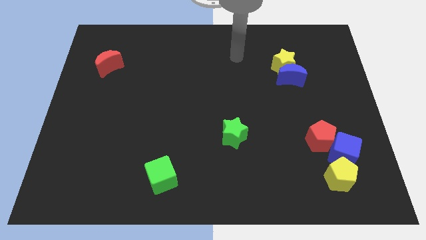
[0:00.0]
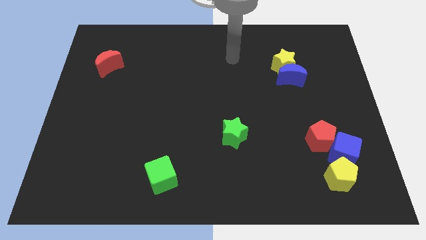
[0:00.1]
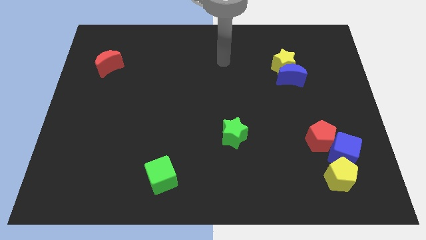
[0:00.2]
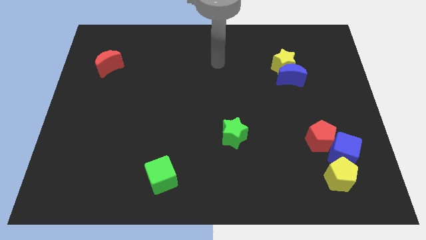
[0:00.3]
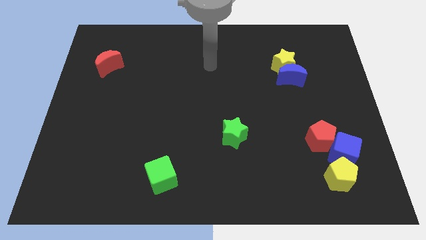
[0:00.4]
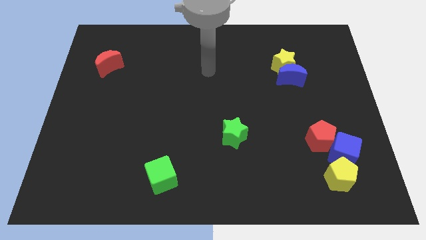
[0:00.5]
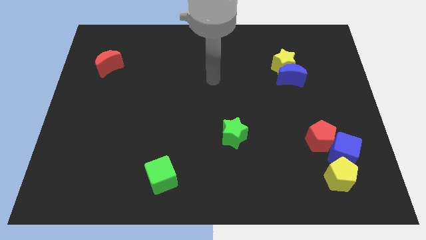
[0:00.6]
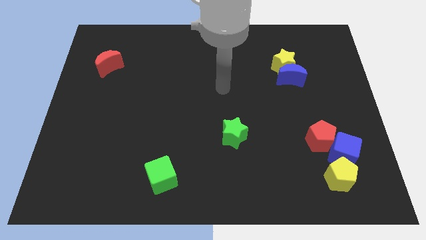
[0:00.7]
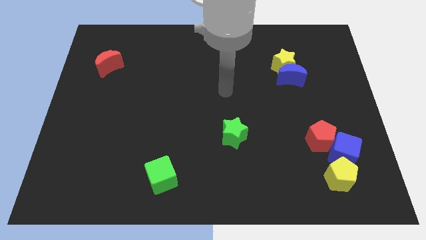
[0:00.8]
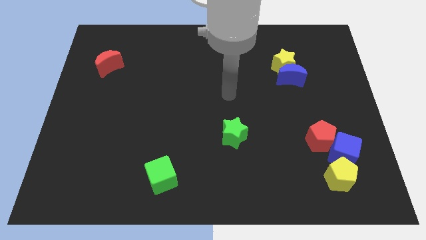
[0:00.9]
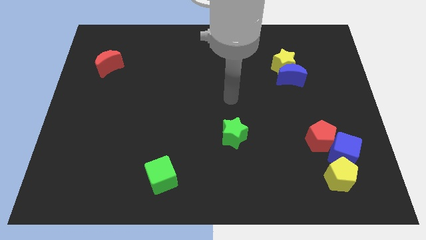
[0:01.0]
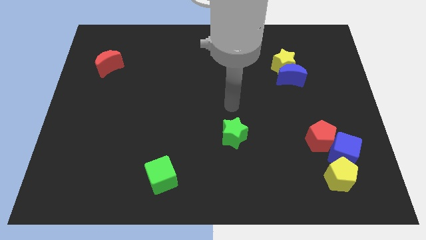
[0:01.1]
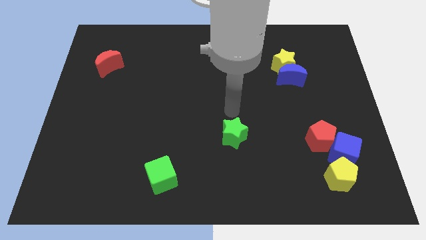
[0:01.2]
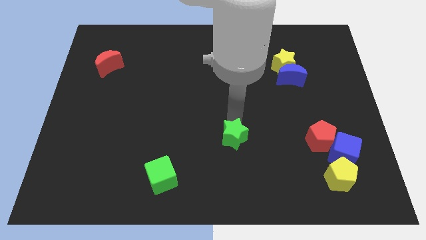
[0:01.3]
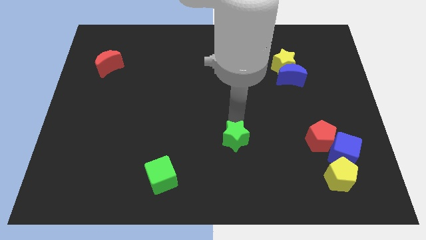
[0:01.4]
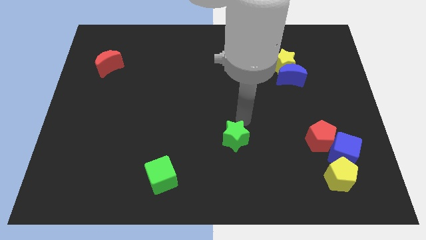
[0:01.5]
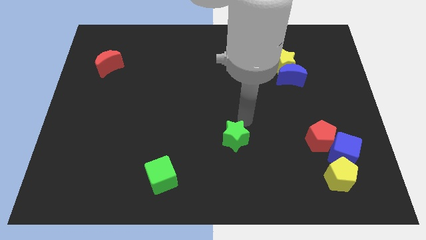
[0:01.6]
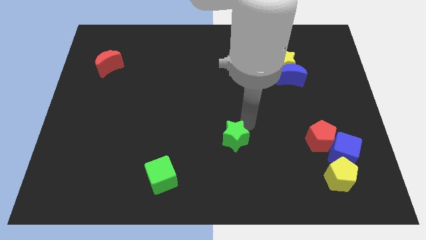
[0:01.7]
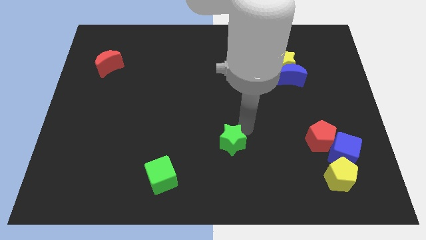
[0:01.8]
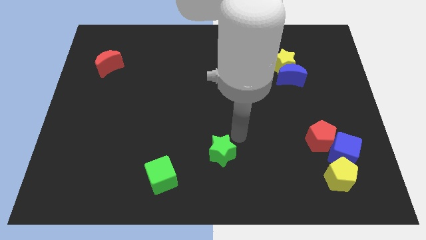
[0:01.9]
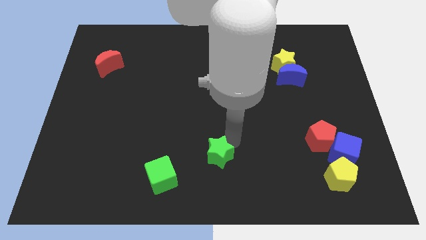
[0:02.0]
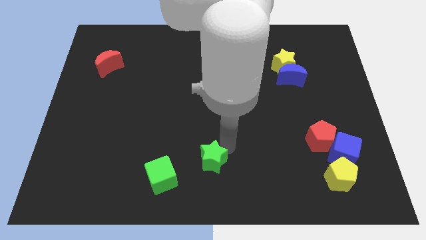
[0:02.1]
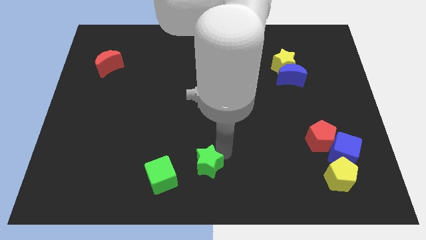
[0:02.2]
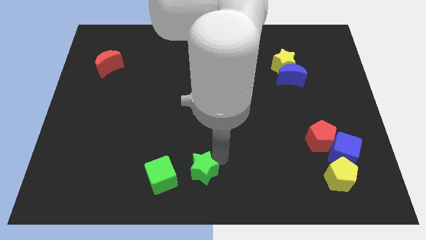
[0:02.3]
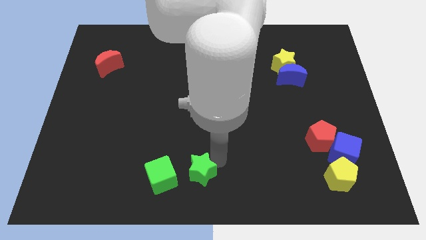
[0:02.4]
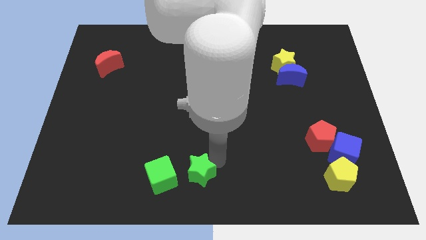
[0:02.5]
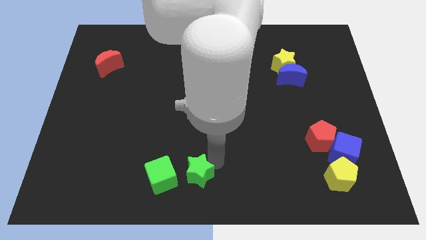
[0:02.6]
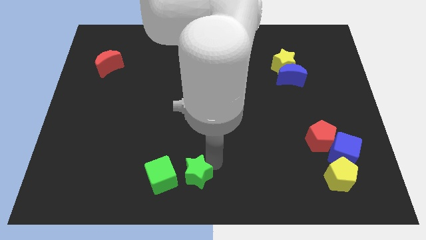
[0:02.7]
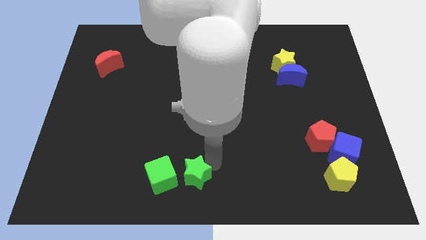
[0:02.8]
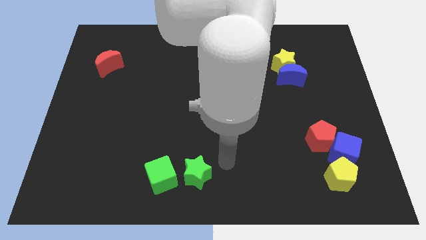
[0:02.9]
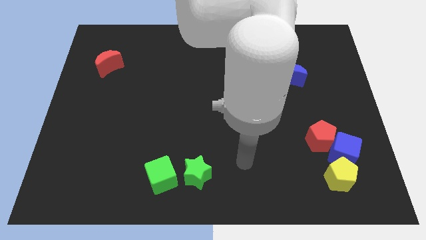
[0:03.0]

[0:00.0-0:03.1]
place the green star parallel right to the green cube

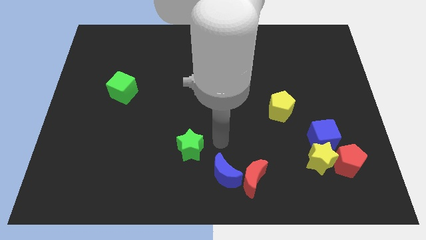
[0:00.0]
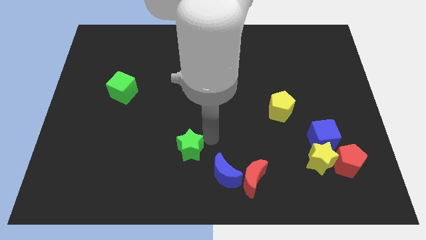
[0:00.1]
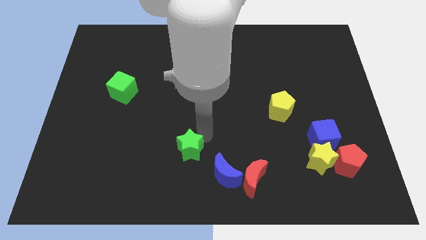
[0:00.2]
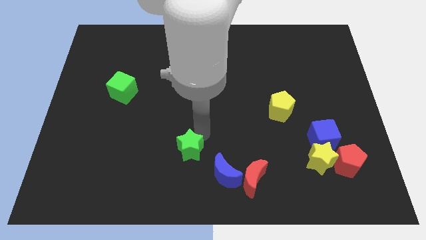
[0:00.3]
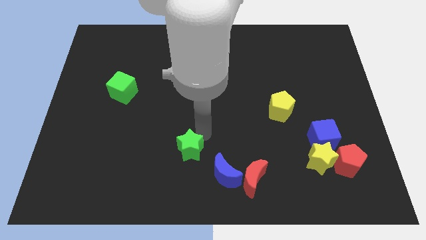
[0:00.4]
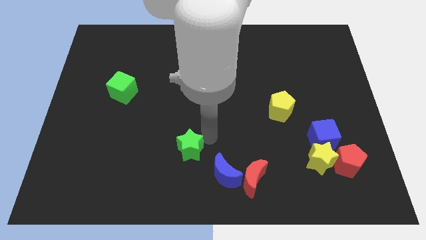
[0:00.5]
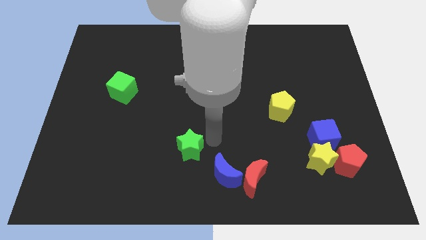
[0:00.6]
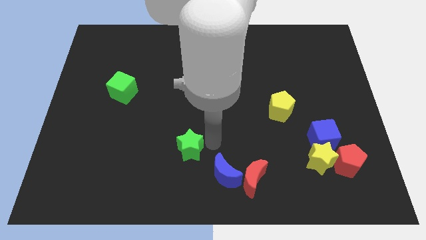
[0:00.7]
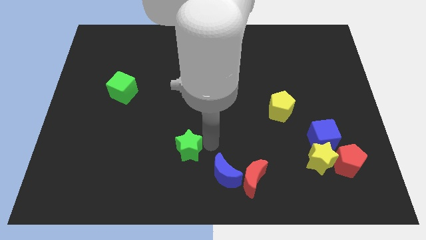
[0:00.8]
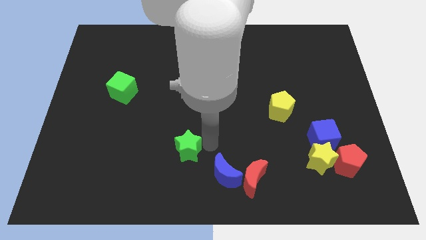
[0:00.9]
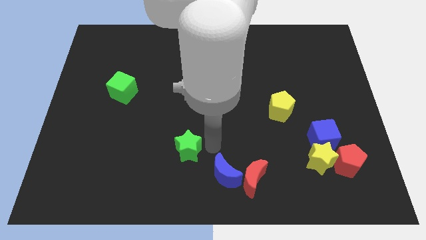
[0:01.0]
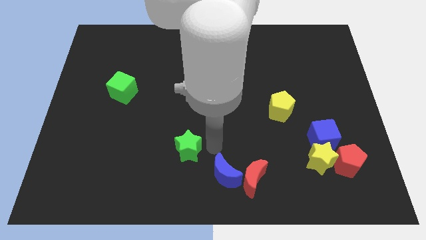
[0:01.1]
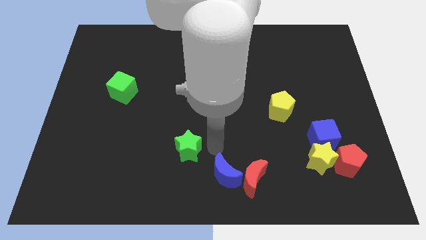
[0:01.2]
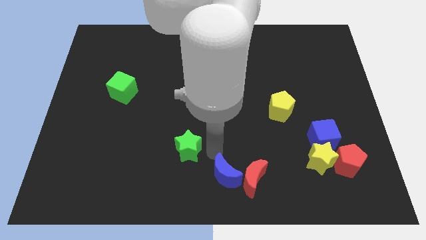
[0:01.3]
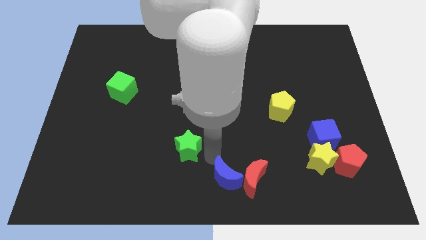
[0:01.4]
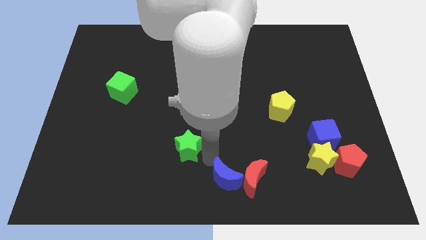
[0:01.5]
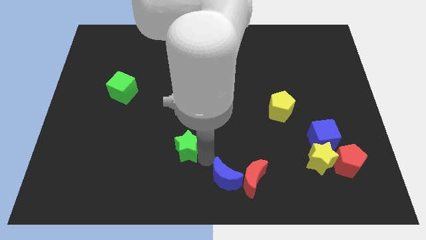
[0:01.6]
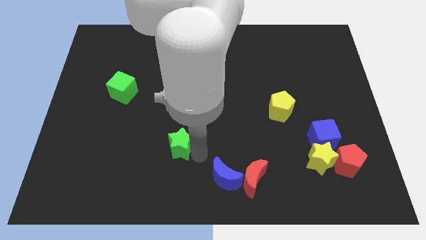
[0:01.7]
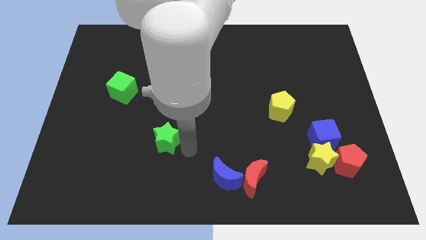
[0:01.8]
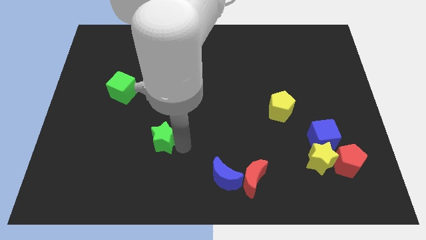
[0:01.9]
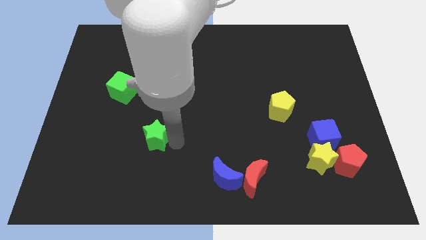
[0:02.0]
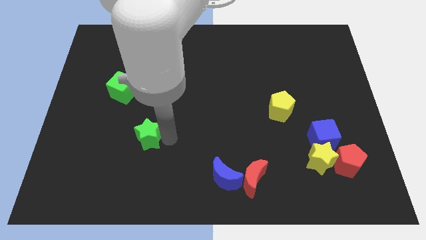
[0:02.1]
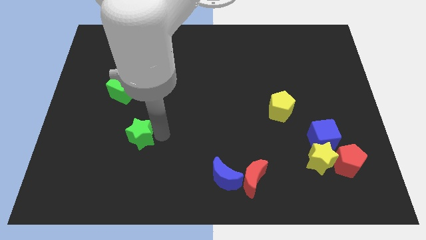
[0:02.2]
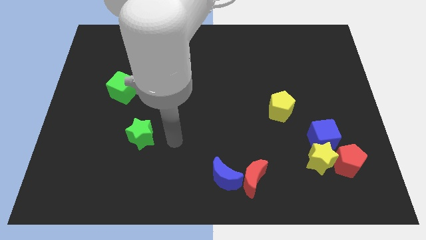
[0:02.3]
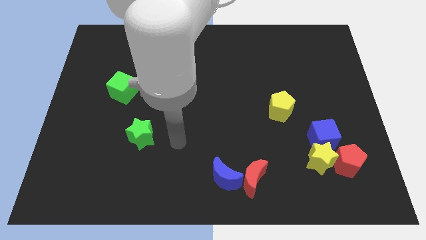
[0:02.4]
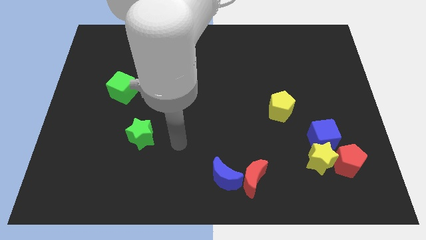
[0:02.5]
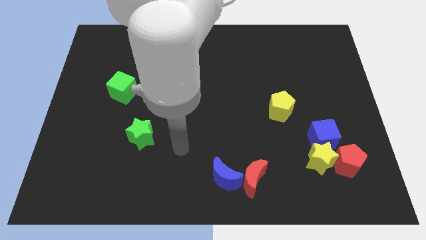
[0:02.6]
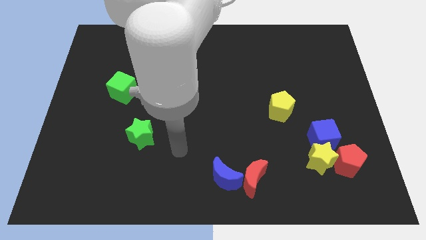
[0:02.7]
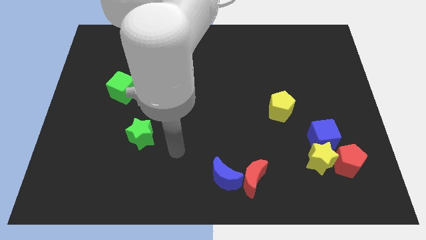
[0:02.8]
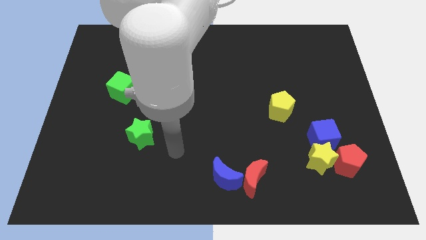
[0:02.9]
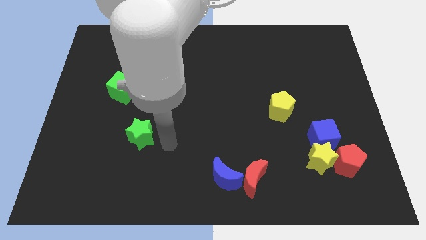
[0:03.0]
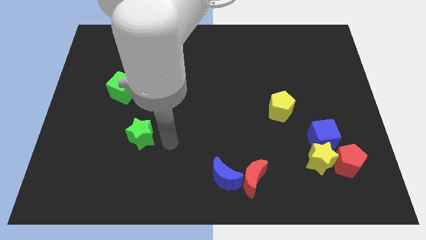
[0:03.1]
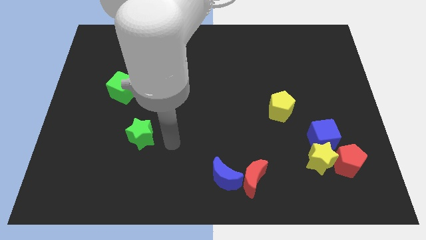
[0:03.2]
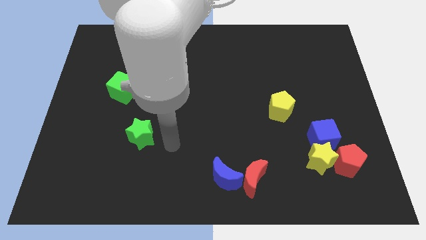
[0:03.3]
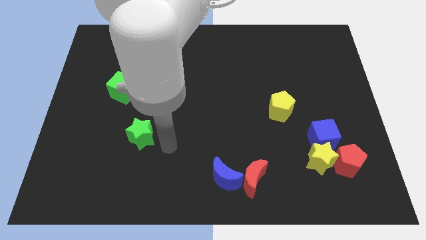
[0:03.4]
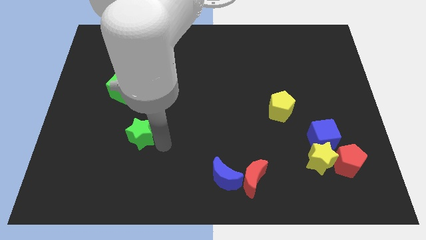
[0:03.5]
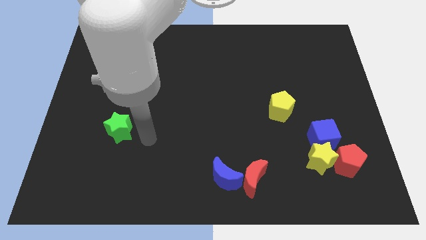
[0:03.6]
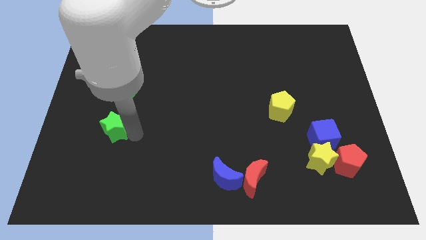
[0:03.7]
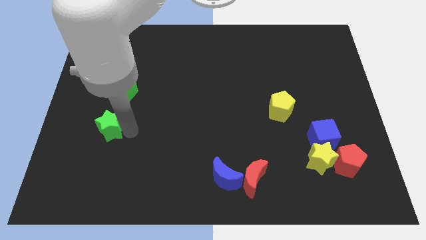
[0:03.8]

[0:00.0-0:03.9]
place the green star vertically below the green cube

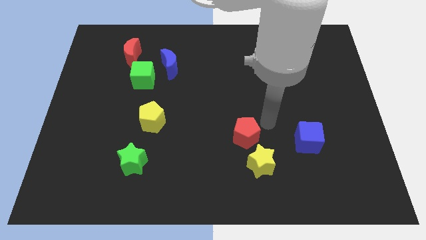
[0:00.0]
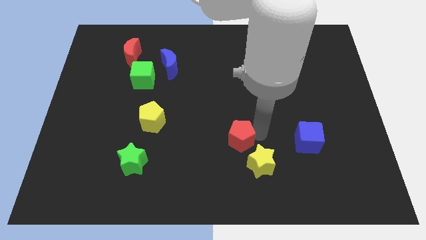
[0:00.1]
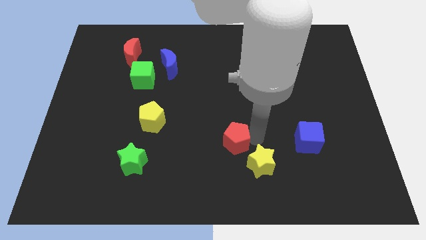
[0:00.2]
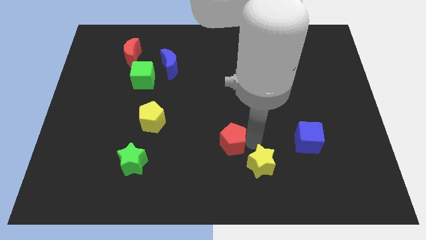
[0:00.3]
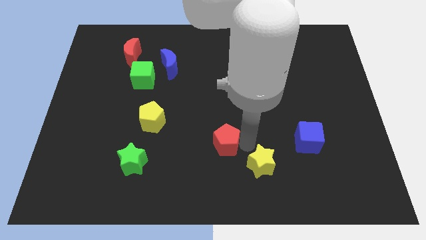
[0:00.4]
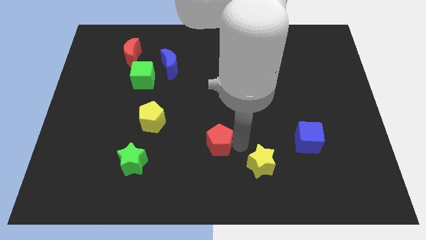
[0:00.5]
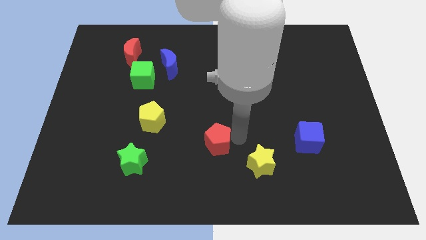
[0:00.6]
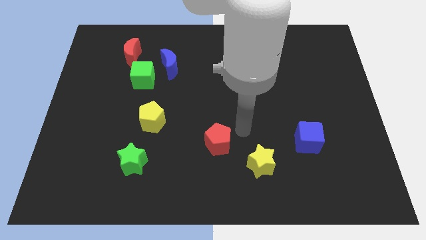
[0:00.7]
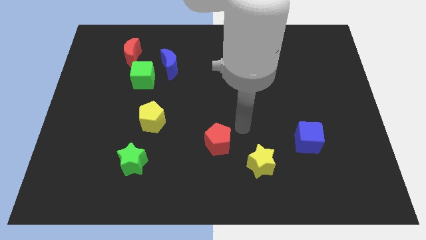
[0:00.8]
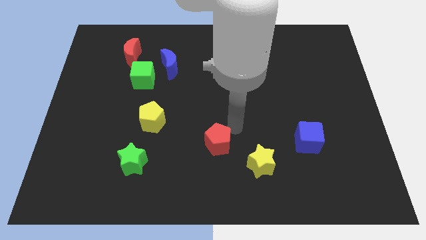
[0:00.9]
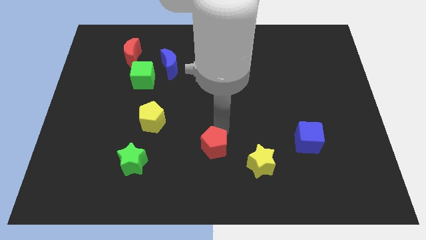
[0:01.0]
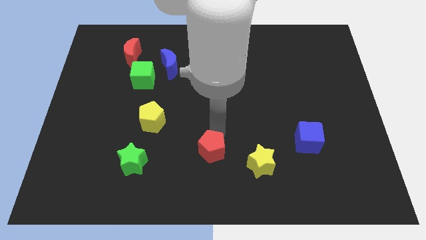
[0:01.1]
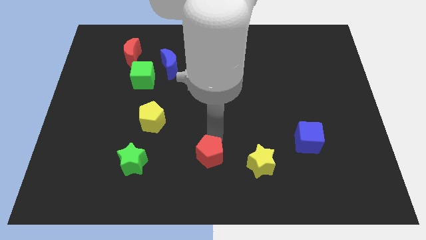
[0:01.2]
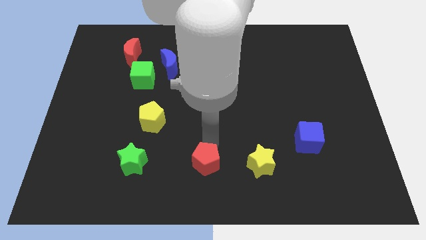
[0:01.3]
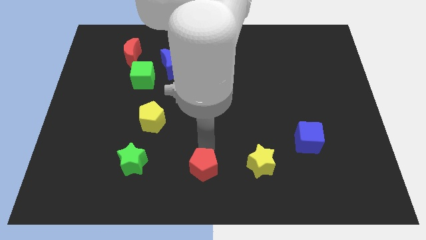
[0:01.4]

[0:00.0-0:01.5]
place the red pentagon between green and yellow star

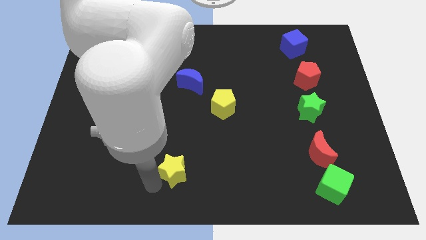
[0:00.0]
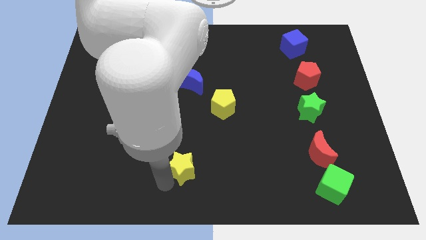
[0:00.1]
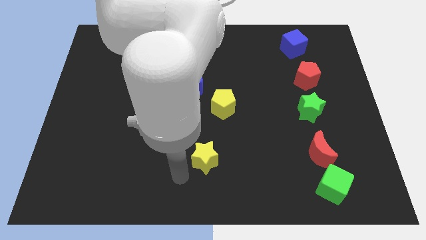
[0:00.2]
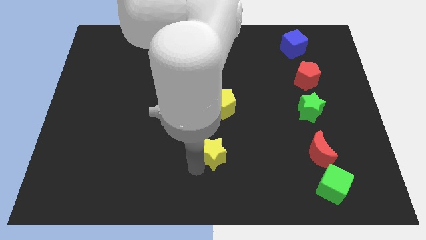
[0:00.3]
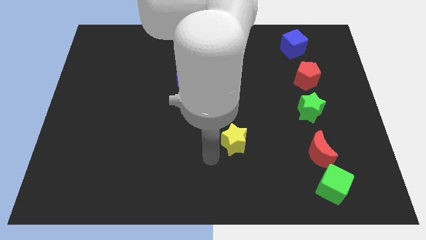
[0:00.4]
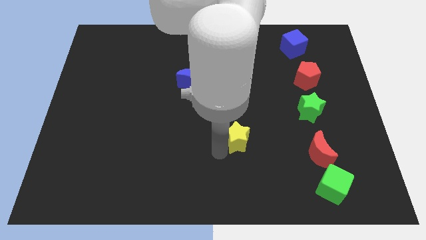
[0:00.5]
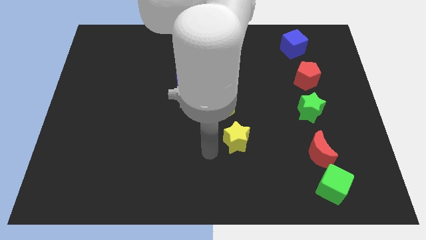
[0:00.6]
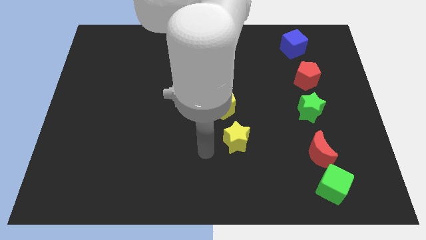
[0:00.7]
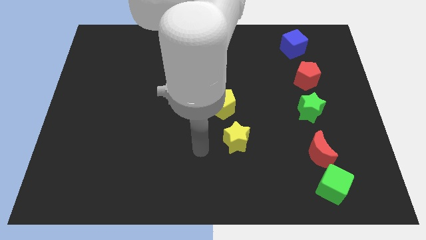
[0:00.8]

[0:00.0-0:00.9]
push the yellow star slightly upwards
